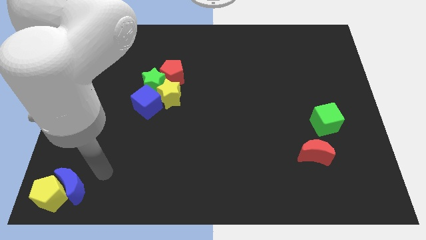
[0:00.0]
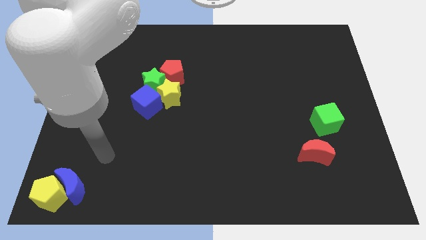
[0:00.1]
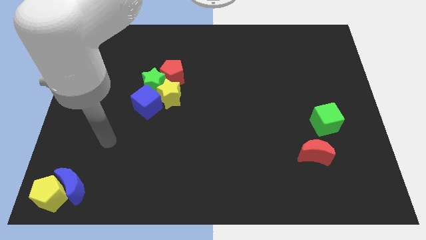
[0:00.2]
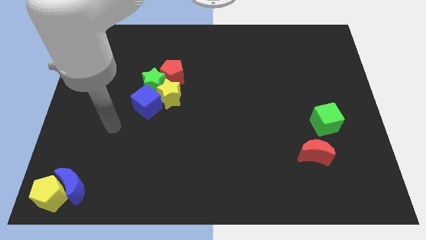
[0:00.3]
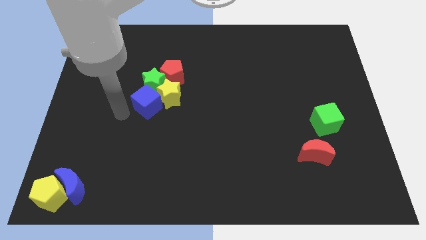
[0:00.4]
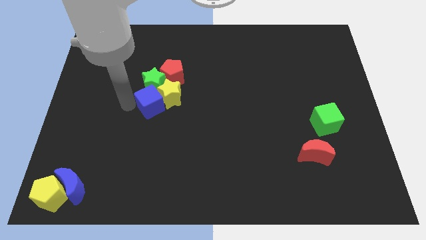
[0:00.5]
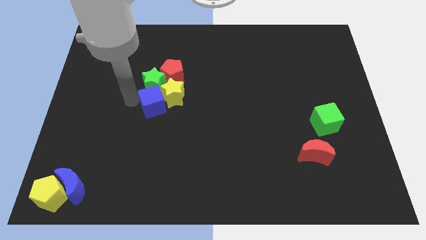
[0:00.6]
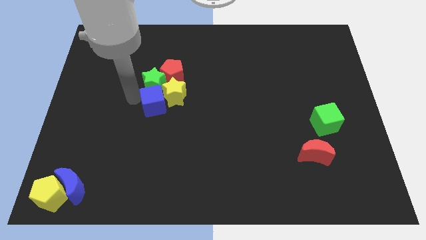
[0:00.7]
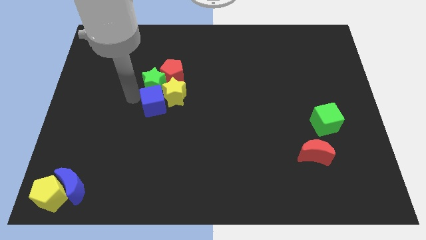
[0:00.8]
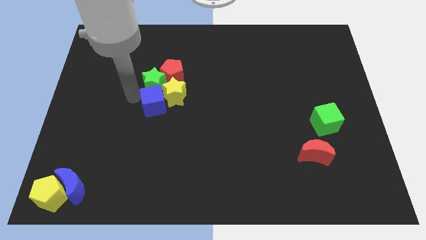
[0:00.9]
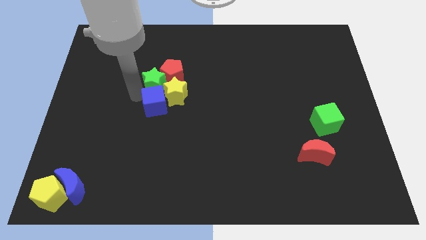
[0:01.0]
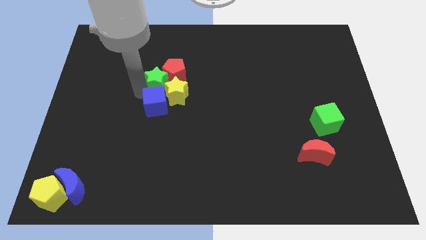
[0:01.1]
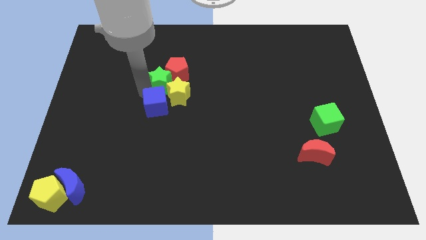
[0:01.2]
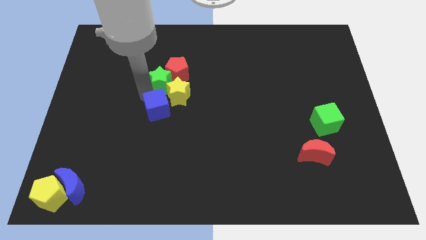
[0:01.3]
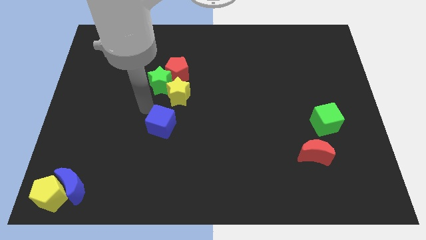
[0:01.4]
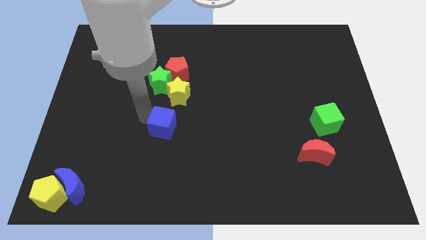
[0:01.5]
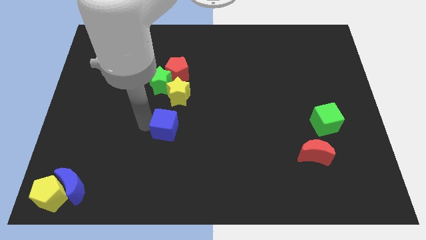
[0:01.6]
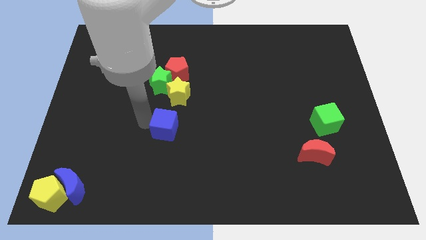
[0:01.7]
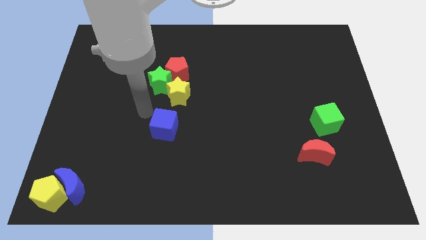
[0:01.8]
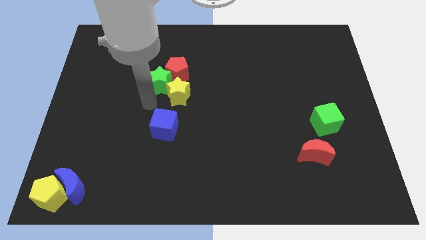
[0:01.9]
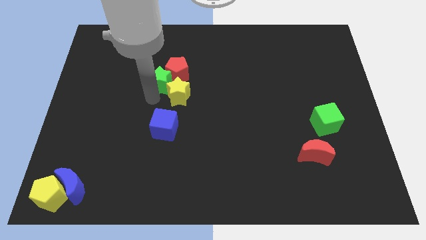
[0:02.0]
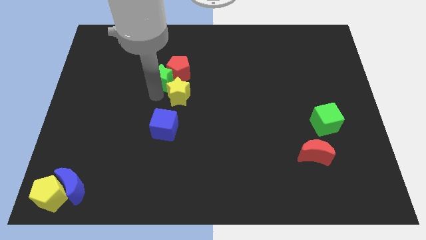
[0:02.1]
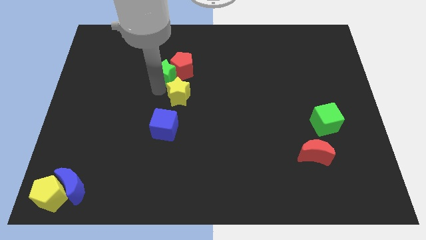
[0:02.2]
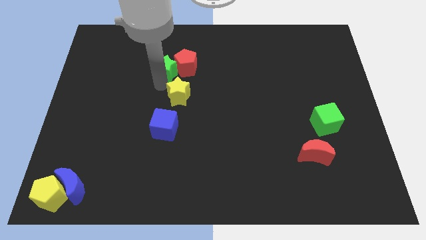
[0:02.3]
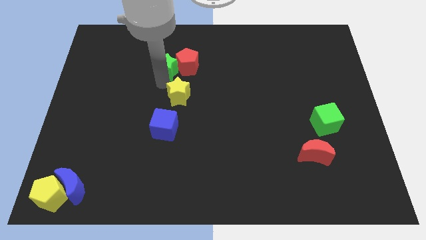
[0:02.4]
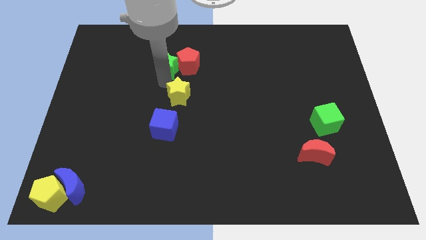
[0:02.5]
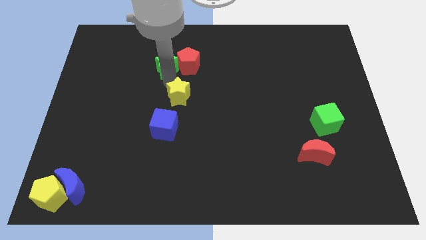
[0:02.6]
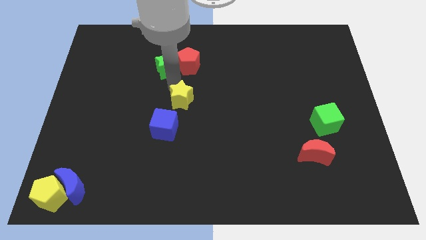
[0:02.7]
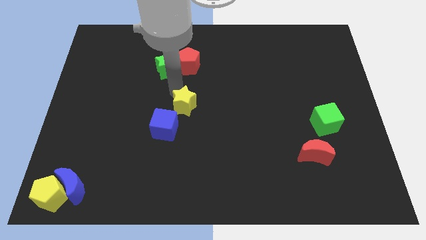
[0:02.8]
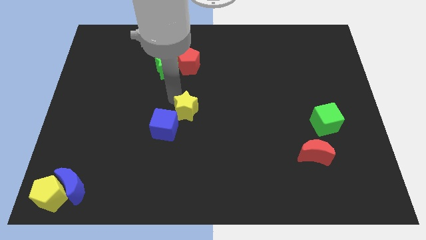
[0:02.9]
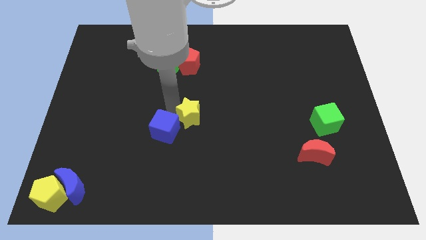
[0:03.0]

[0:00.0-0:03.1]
slightly push the blue cube downwards

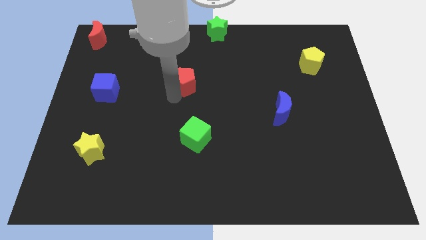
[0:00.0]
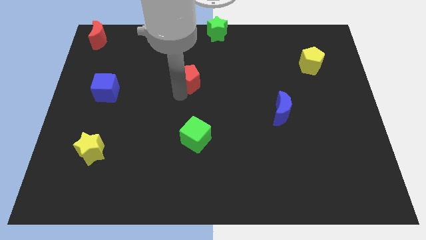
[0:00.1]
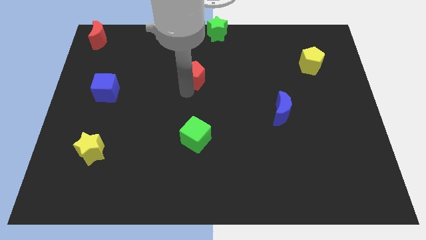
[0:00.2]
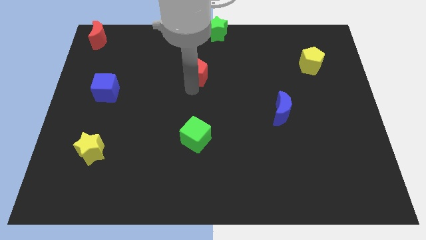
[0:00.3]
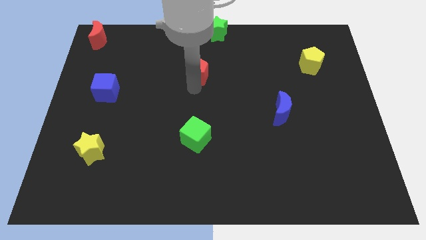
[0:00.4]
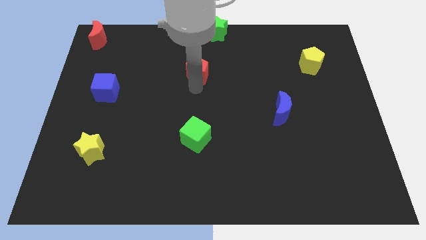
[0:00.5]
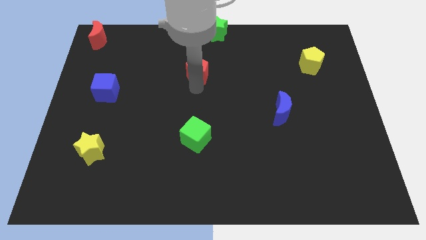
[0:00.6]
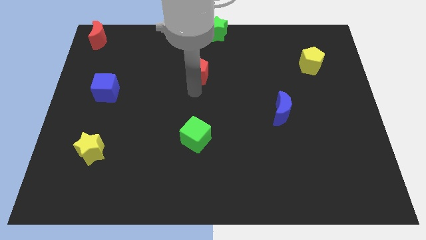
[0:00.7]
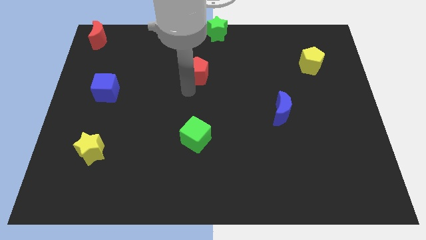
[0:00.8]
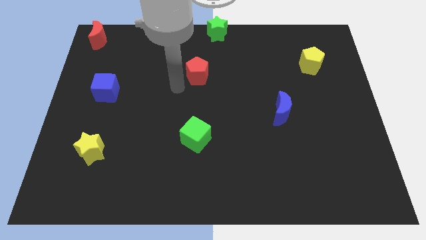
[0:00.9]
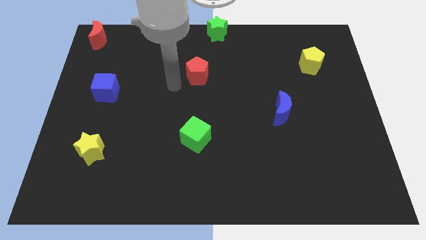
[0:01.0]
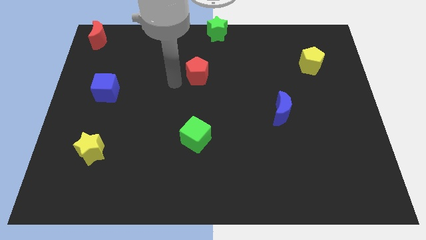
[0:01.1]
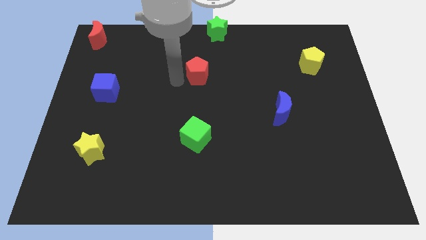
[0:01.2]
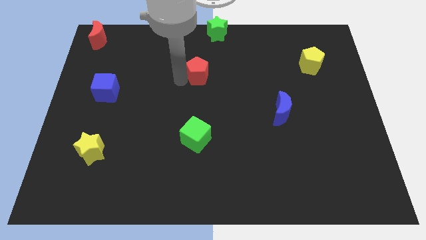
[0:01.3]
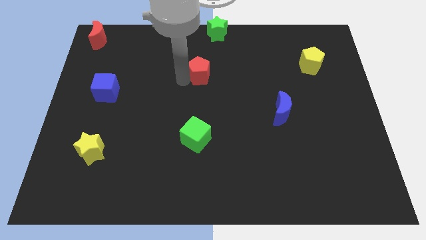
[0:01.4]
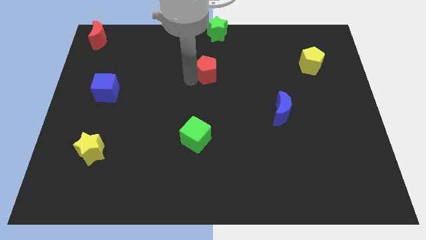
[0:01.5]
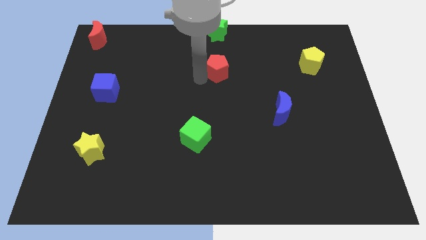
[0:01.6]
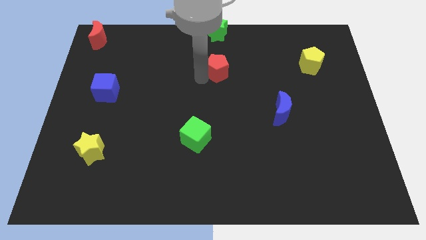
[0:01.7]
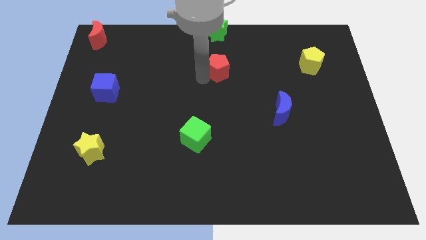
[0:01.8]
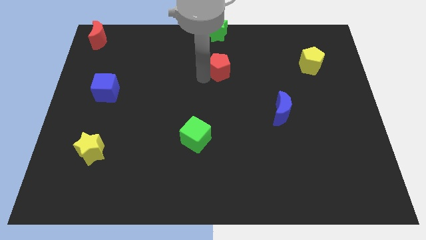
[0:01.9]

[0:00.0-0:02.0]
move the red pentagon below the green star

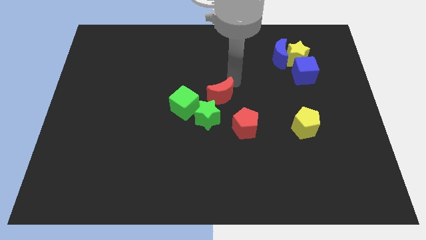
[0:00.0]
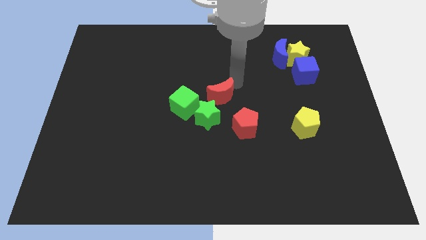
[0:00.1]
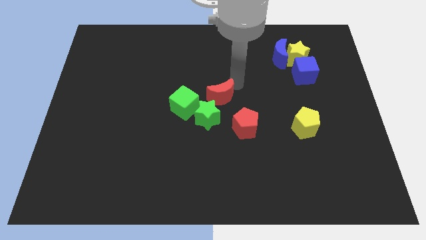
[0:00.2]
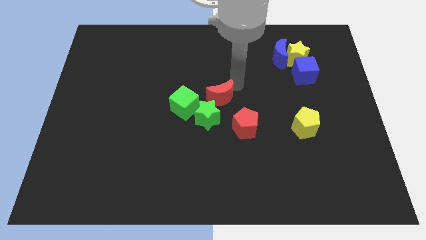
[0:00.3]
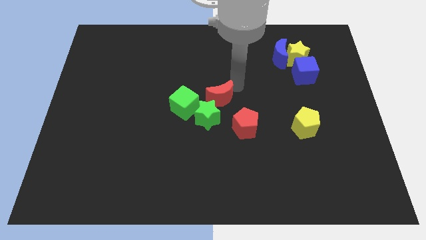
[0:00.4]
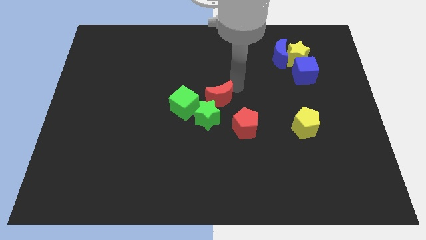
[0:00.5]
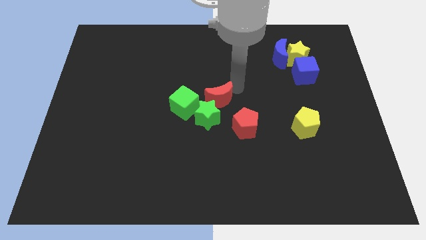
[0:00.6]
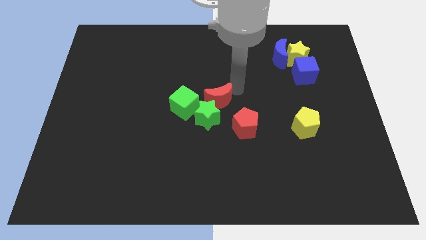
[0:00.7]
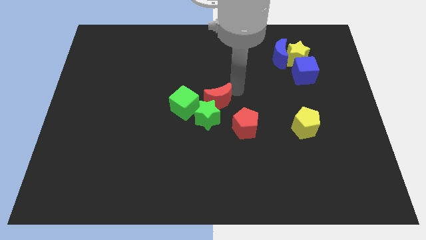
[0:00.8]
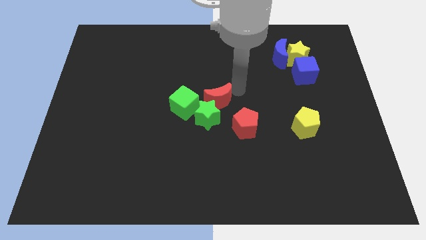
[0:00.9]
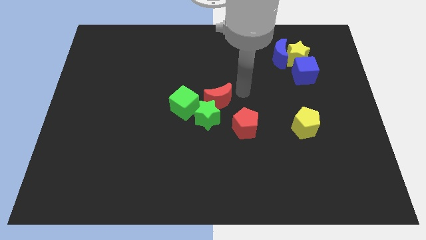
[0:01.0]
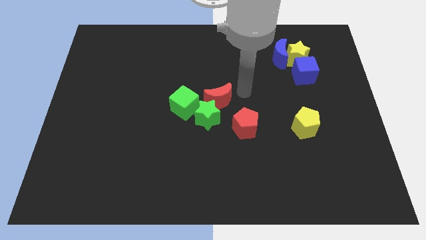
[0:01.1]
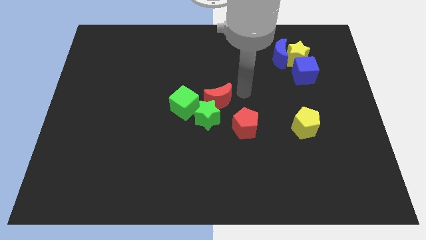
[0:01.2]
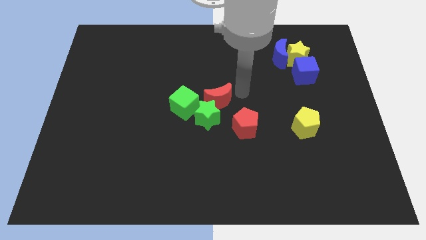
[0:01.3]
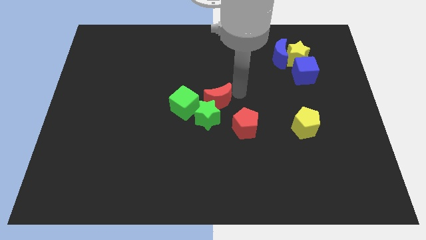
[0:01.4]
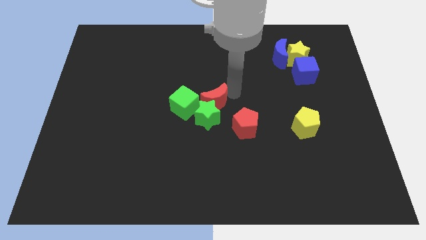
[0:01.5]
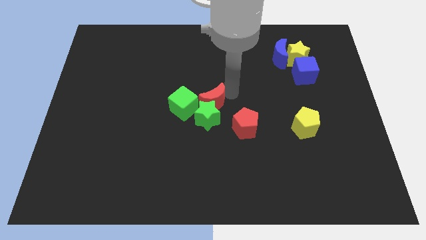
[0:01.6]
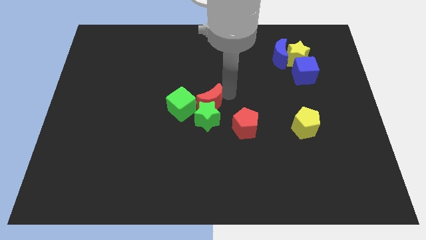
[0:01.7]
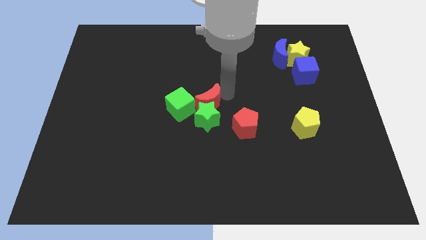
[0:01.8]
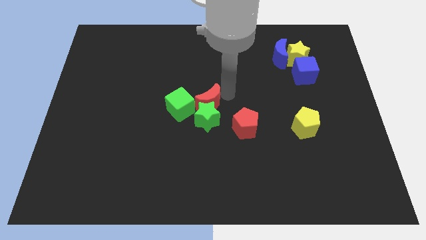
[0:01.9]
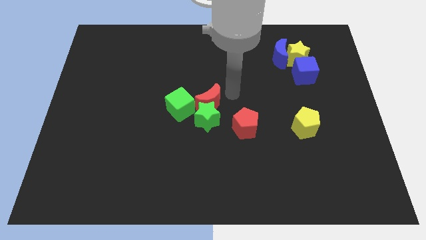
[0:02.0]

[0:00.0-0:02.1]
put the red moon on the top of the green star

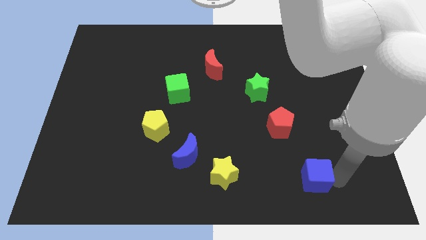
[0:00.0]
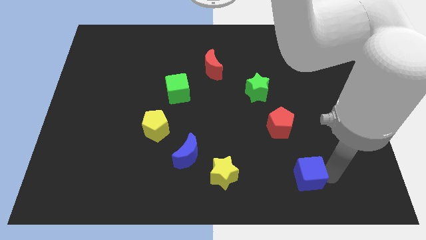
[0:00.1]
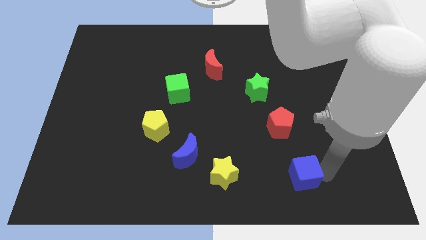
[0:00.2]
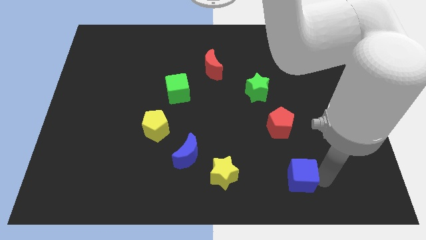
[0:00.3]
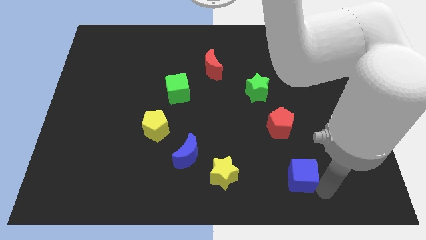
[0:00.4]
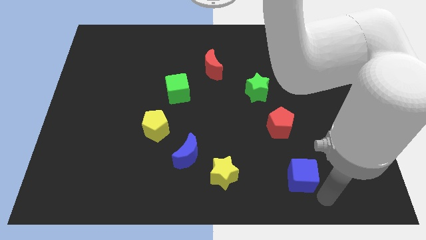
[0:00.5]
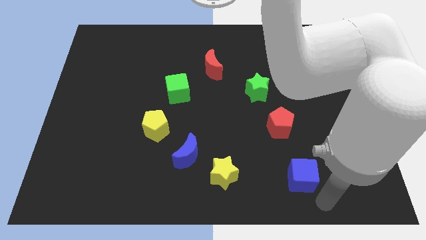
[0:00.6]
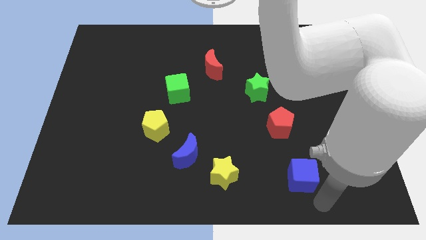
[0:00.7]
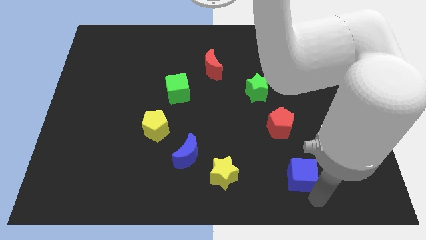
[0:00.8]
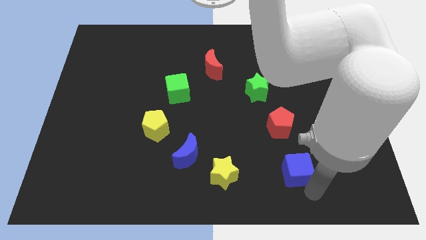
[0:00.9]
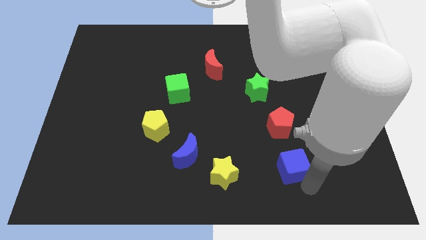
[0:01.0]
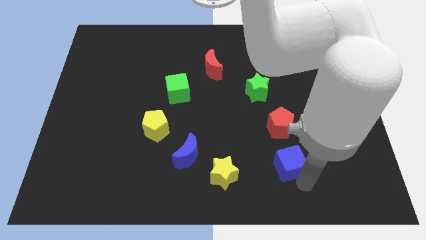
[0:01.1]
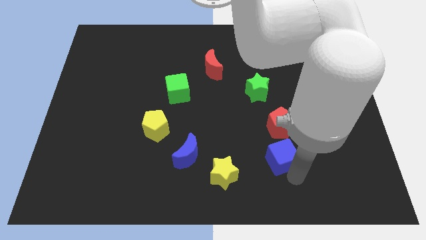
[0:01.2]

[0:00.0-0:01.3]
put the blue cube below the red pentagon

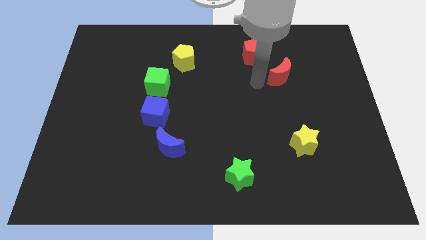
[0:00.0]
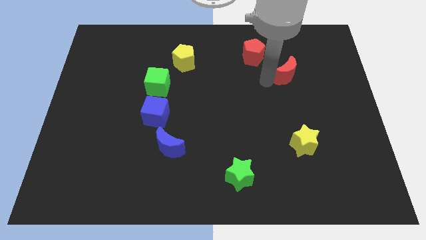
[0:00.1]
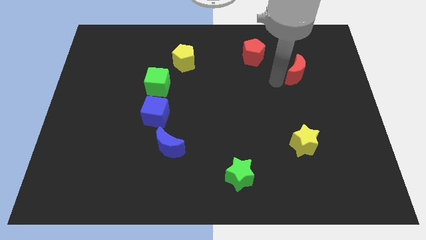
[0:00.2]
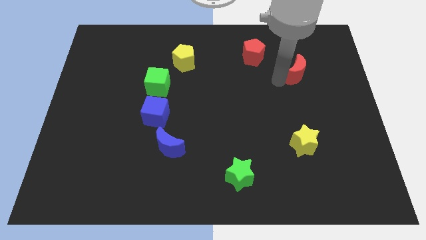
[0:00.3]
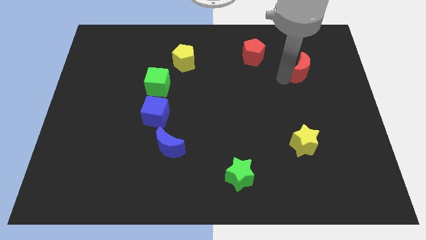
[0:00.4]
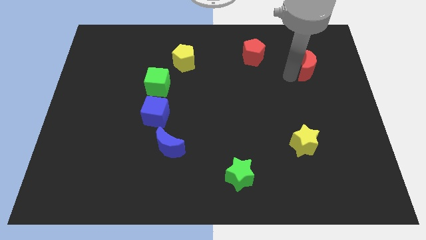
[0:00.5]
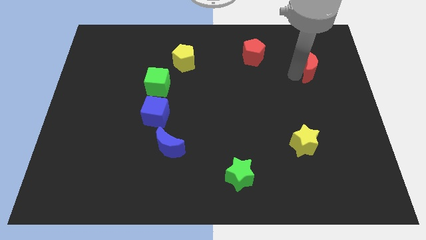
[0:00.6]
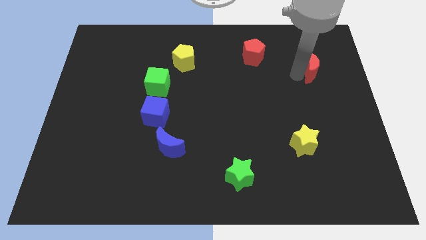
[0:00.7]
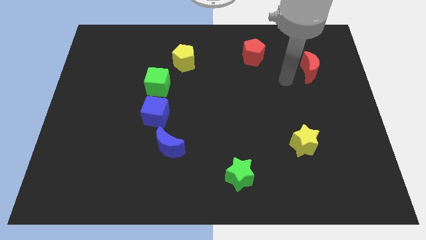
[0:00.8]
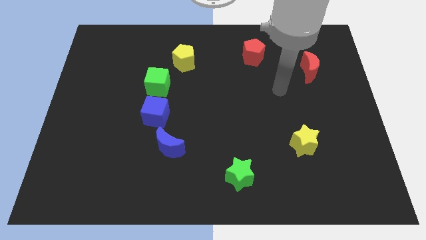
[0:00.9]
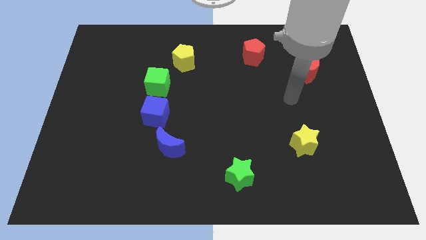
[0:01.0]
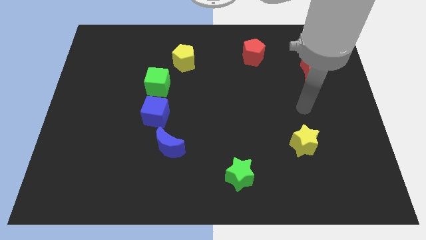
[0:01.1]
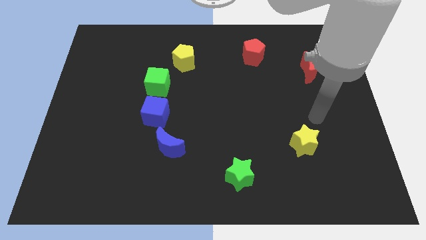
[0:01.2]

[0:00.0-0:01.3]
slide the red moon to the right side
